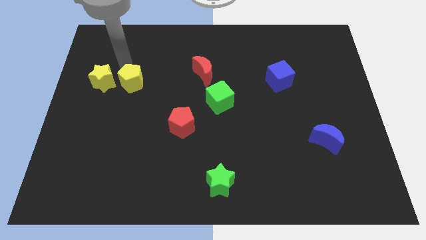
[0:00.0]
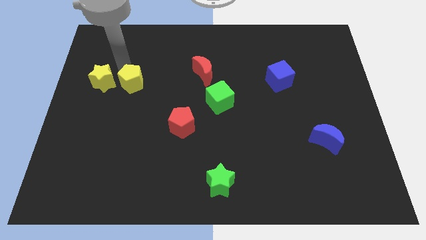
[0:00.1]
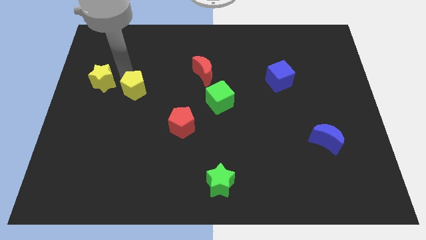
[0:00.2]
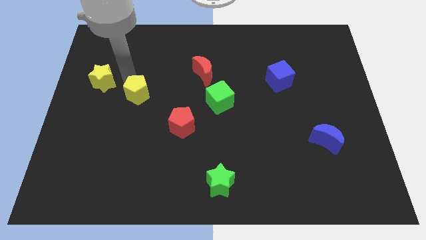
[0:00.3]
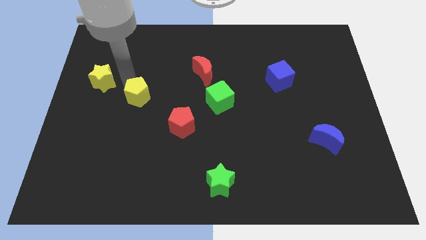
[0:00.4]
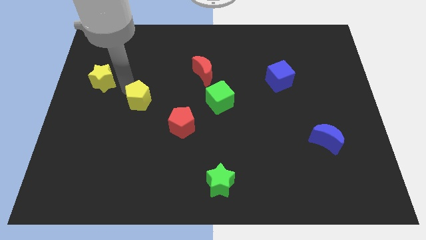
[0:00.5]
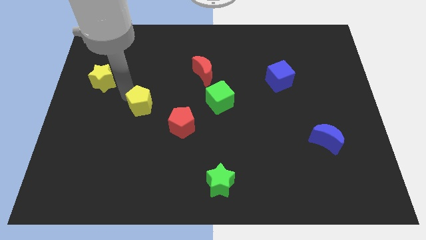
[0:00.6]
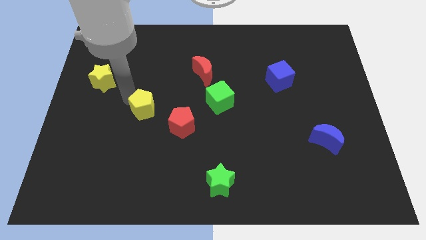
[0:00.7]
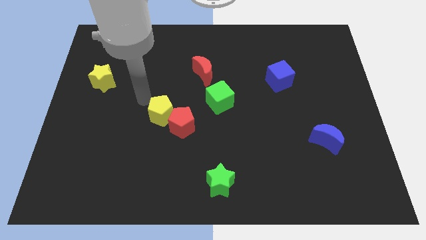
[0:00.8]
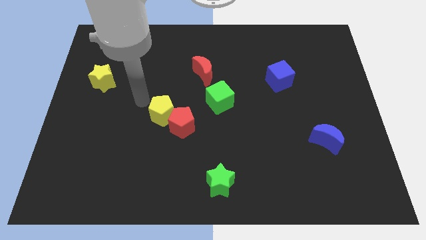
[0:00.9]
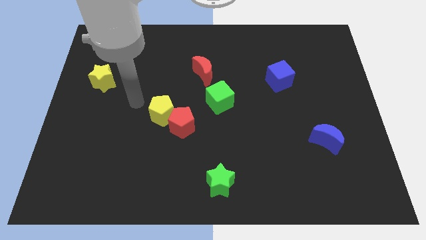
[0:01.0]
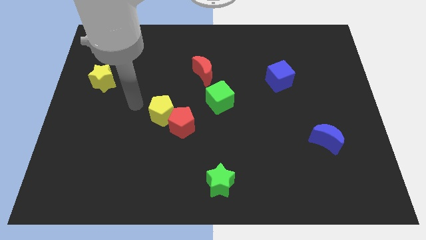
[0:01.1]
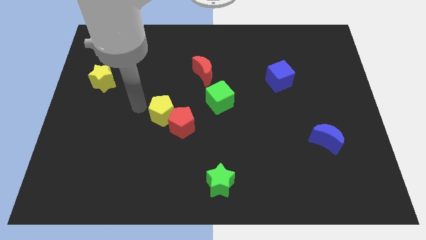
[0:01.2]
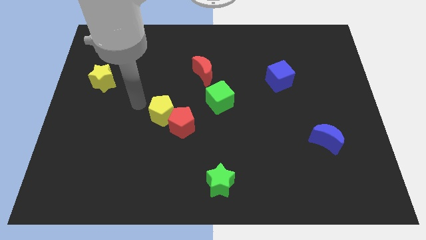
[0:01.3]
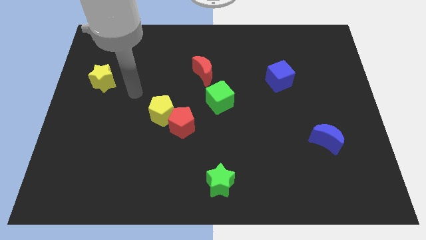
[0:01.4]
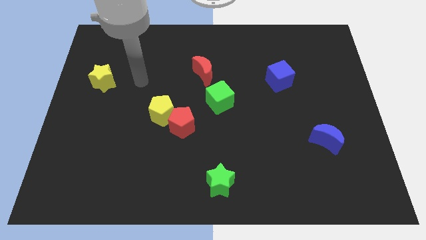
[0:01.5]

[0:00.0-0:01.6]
move the yellow pentagon close to the red pentagon

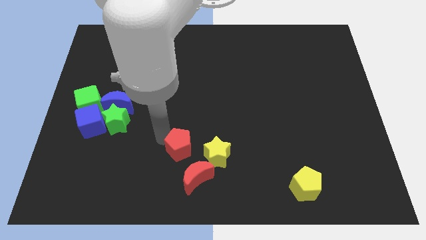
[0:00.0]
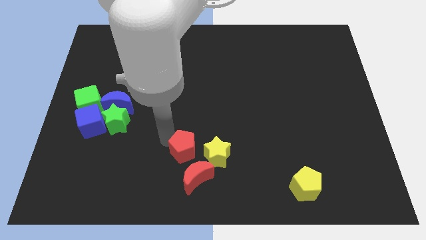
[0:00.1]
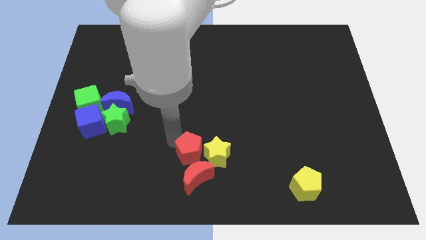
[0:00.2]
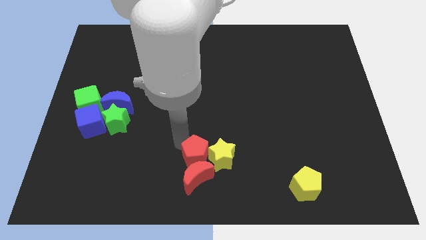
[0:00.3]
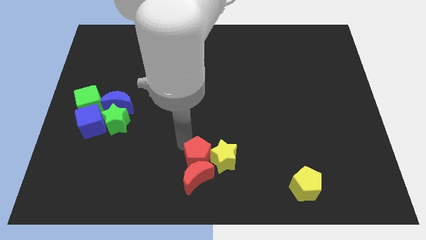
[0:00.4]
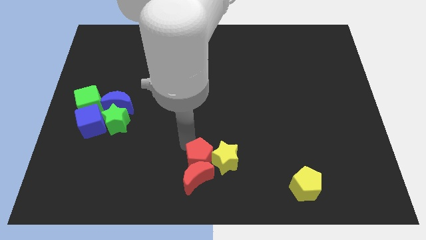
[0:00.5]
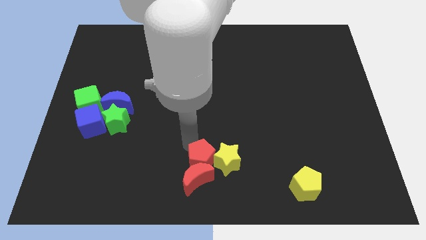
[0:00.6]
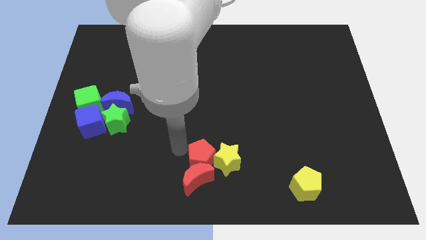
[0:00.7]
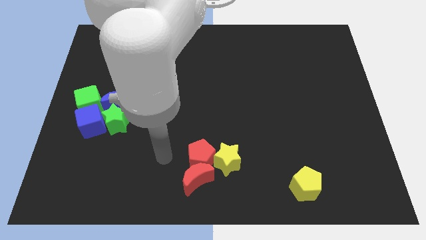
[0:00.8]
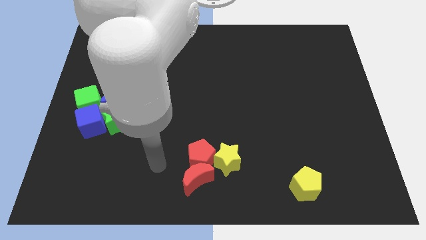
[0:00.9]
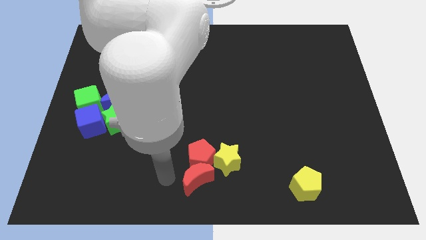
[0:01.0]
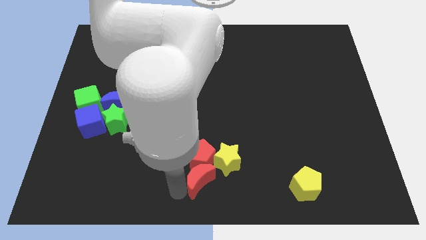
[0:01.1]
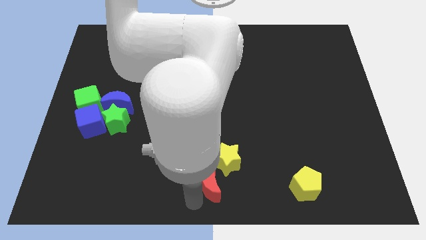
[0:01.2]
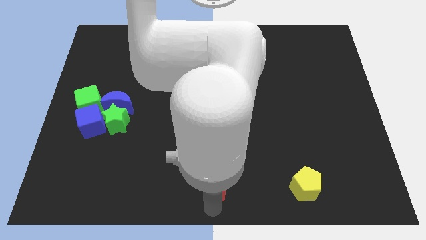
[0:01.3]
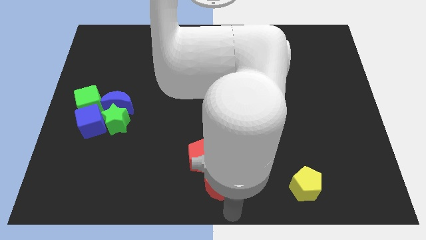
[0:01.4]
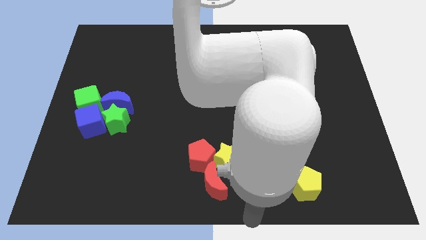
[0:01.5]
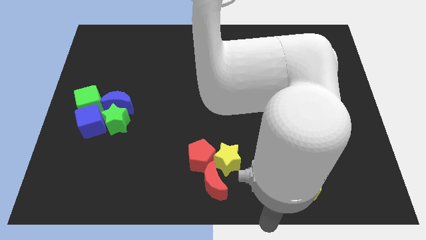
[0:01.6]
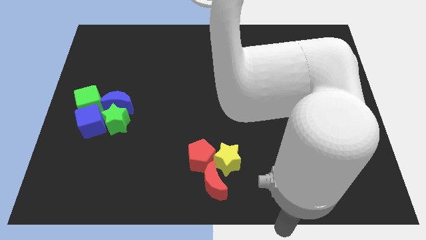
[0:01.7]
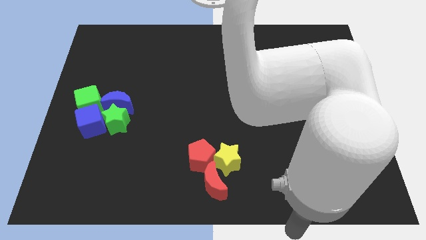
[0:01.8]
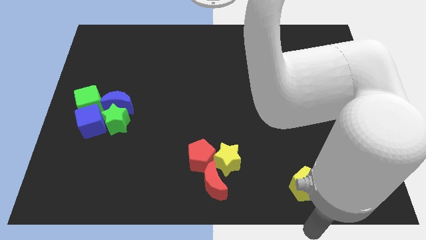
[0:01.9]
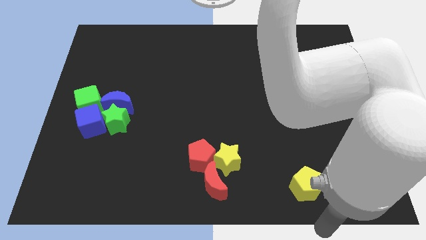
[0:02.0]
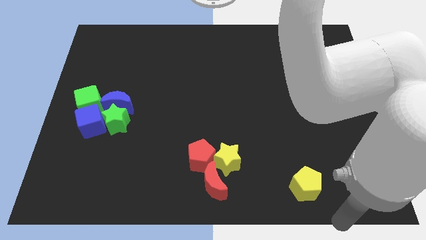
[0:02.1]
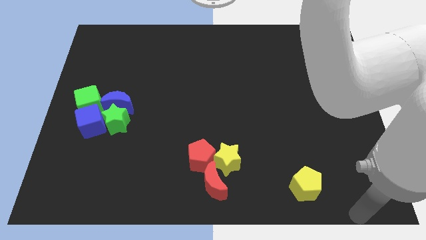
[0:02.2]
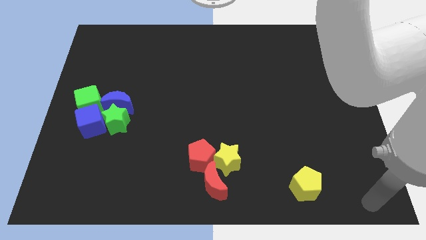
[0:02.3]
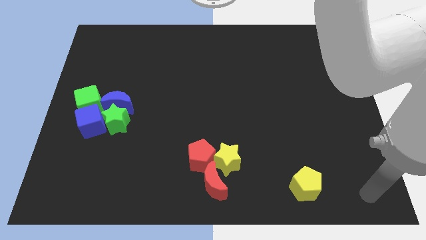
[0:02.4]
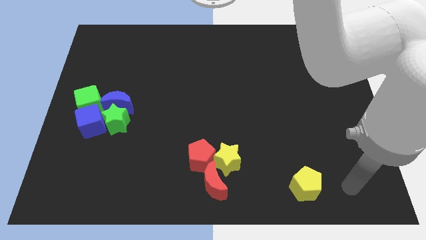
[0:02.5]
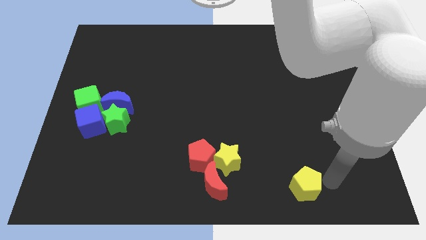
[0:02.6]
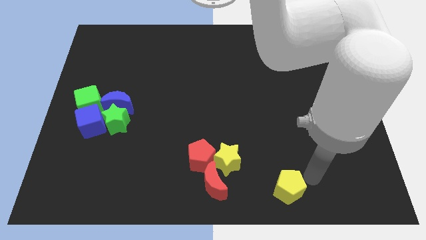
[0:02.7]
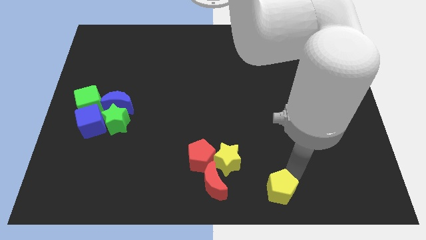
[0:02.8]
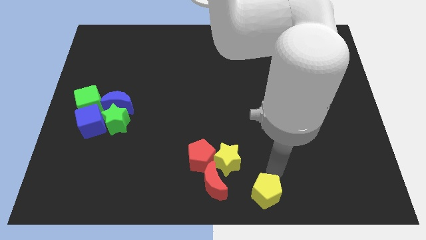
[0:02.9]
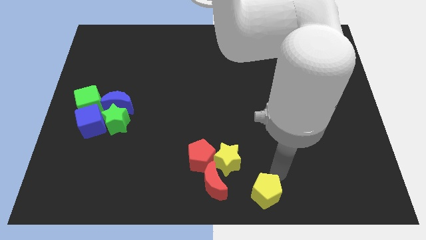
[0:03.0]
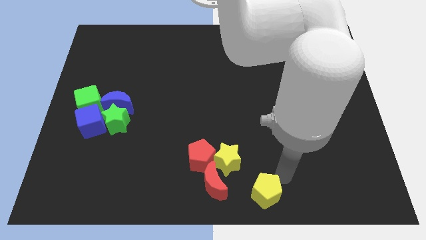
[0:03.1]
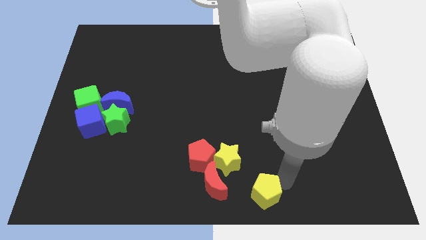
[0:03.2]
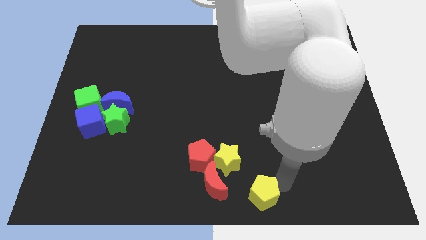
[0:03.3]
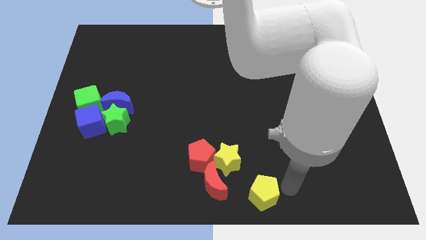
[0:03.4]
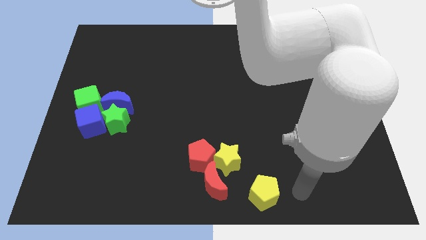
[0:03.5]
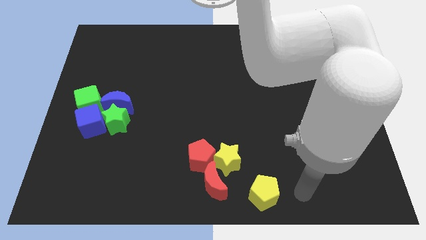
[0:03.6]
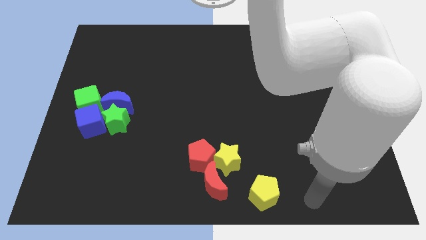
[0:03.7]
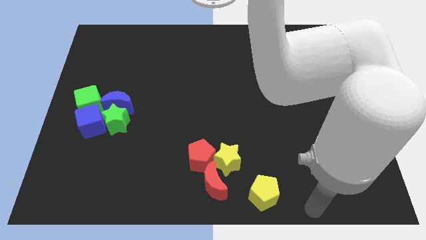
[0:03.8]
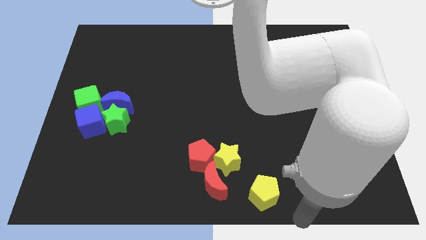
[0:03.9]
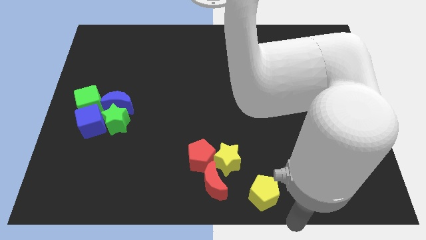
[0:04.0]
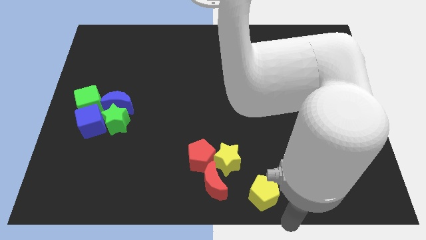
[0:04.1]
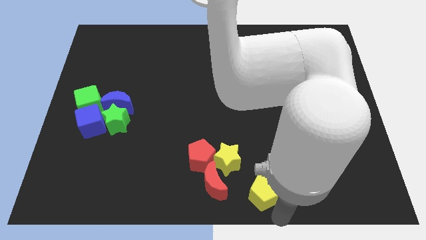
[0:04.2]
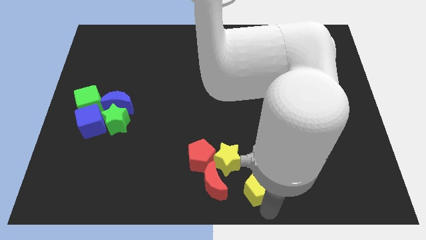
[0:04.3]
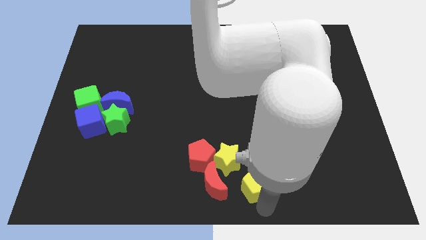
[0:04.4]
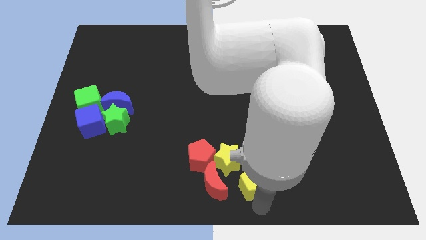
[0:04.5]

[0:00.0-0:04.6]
move yellow pentagon to the right of red moon

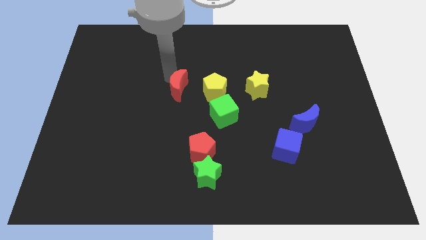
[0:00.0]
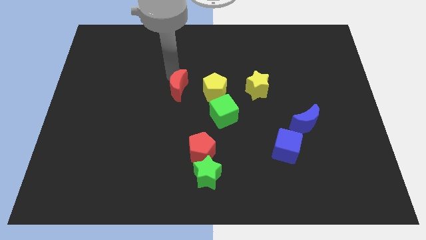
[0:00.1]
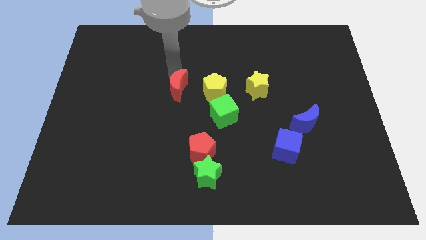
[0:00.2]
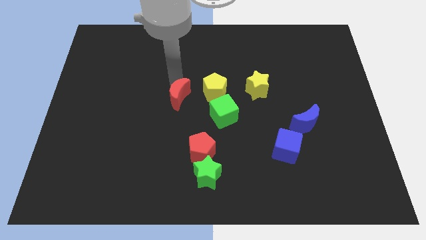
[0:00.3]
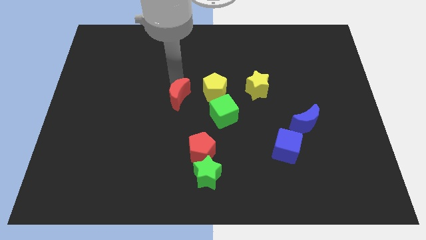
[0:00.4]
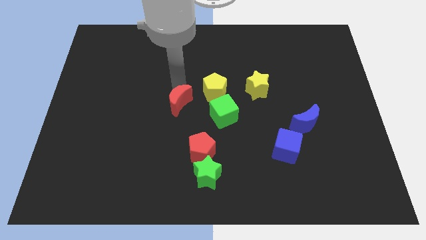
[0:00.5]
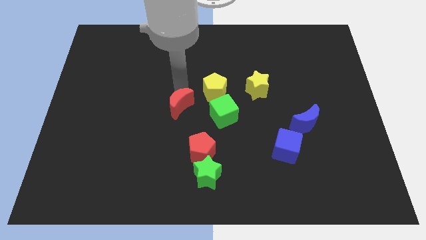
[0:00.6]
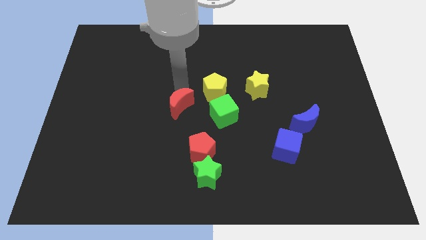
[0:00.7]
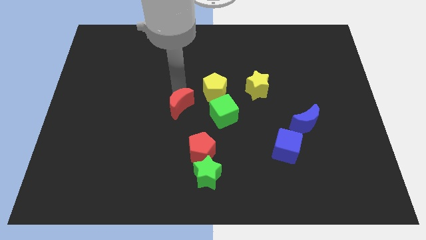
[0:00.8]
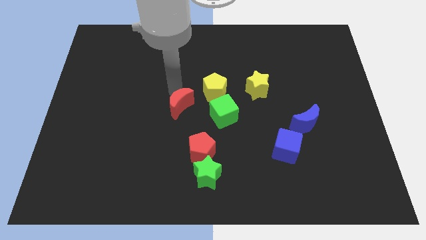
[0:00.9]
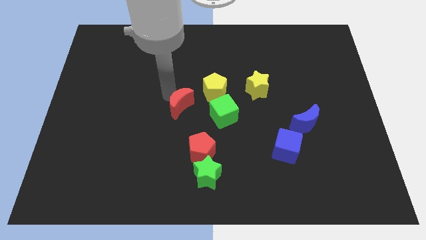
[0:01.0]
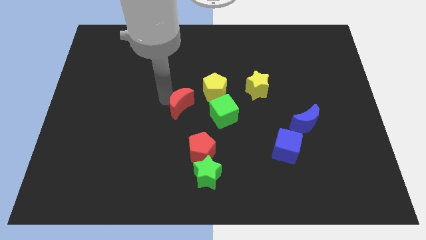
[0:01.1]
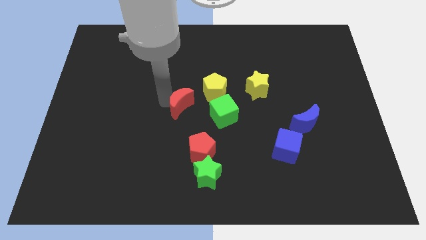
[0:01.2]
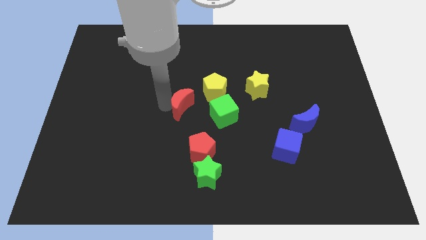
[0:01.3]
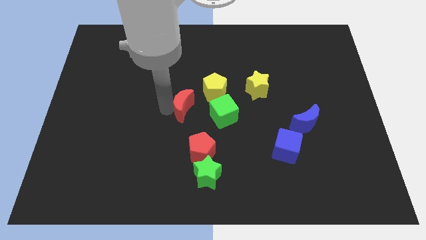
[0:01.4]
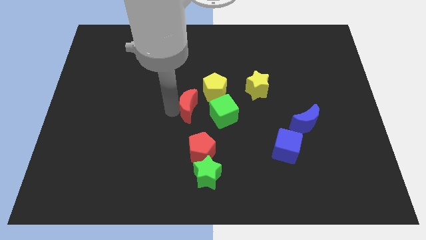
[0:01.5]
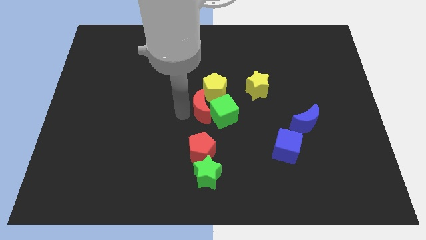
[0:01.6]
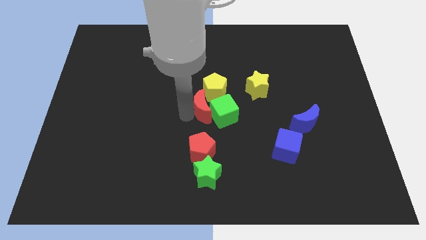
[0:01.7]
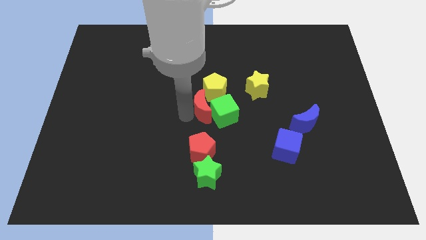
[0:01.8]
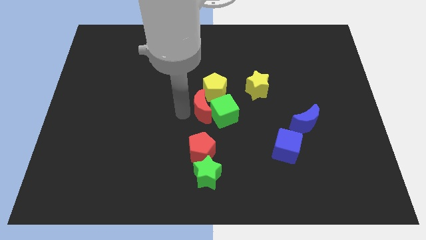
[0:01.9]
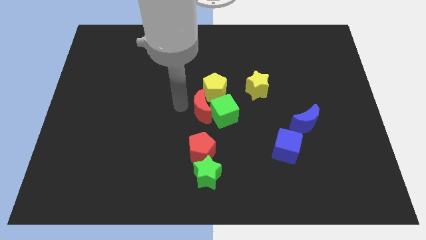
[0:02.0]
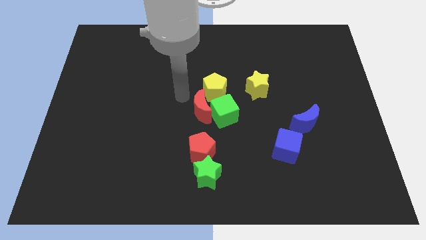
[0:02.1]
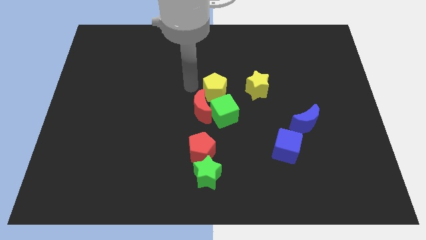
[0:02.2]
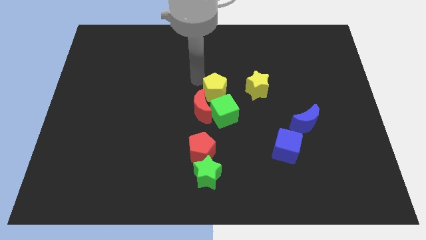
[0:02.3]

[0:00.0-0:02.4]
place the red crescent to the center of the board

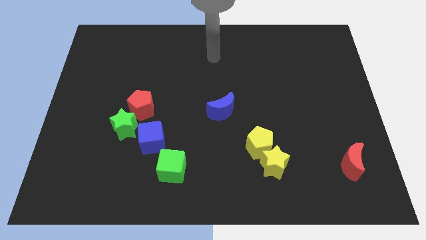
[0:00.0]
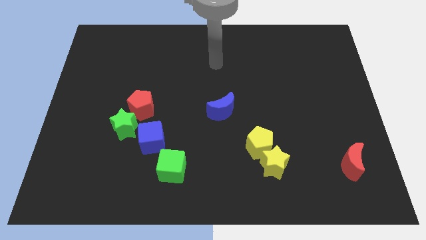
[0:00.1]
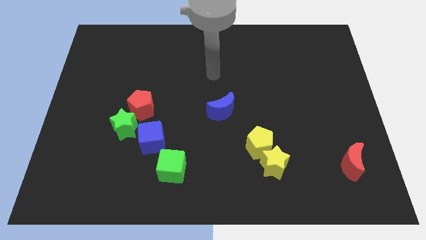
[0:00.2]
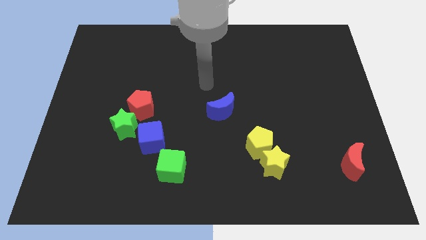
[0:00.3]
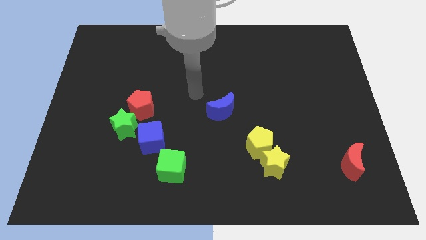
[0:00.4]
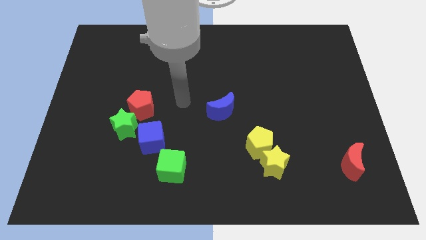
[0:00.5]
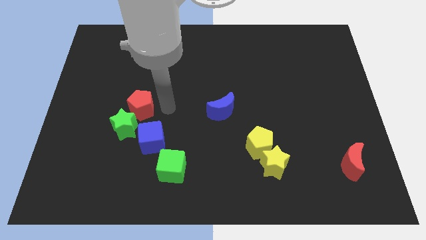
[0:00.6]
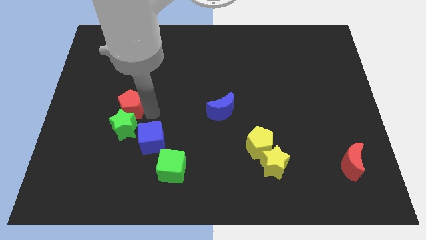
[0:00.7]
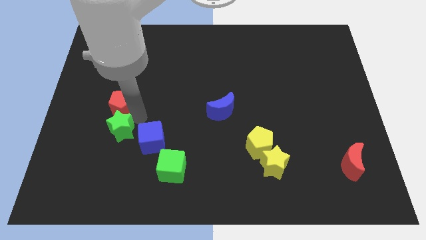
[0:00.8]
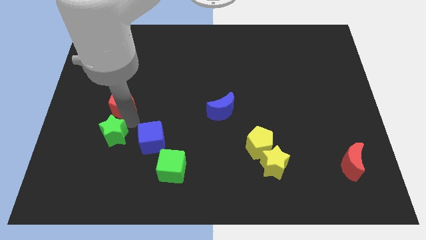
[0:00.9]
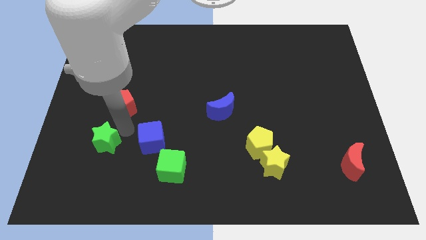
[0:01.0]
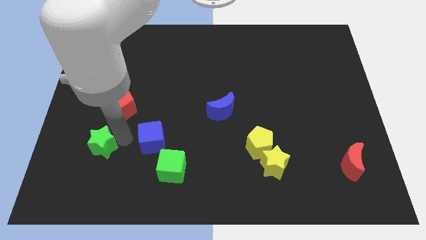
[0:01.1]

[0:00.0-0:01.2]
separate green star from red pentagon
